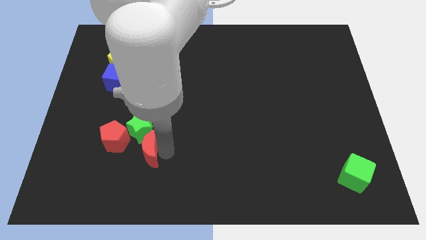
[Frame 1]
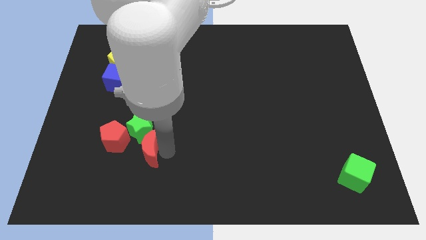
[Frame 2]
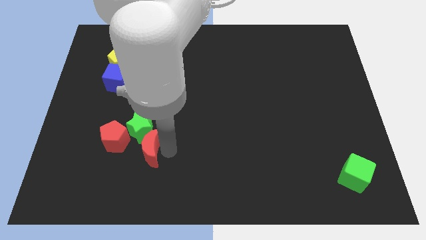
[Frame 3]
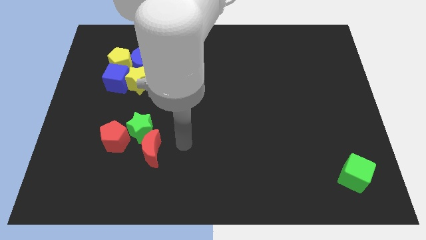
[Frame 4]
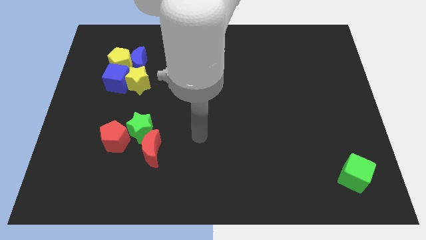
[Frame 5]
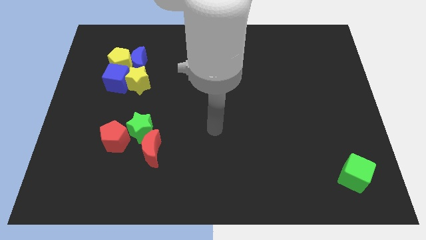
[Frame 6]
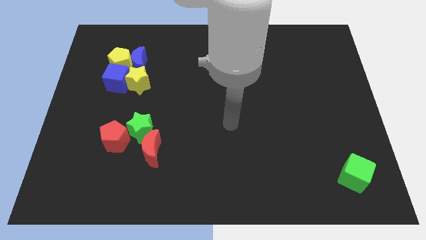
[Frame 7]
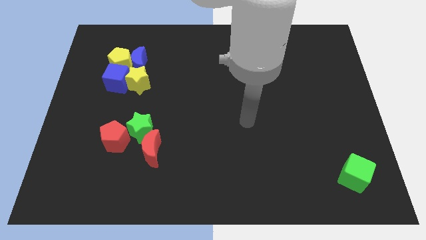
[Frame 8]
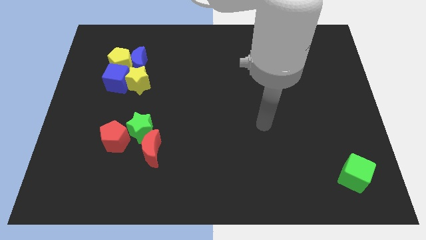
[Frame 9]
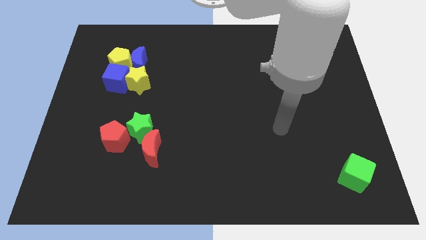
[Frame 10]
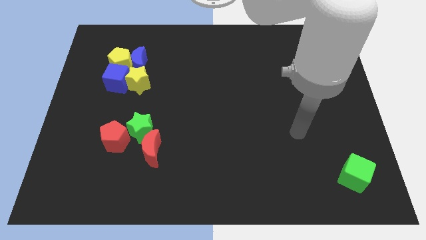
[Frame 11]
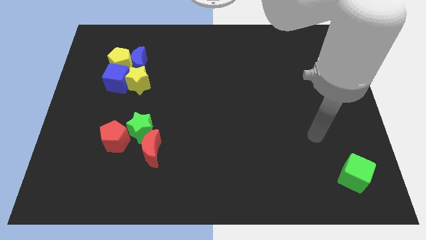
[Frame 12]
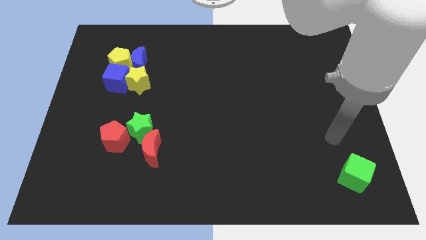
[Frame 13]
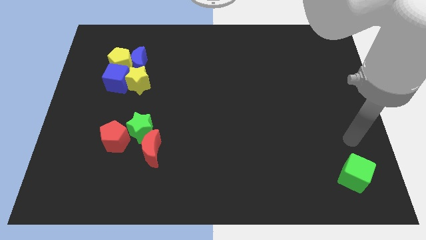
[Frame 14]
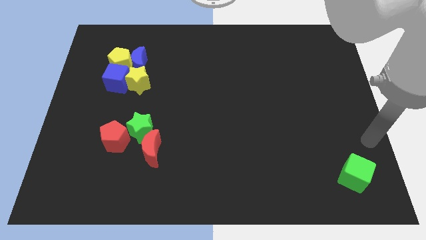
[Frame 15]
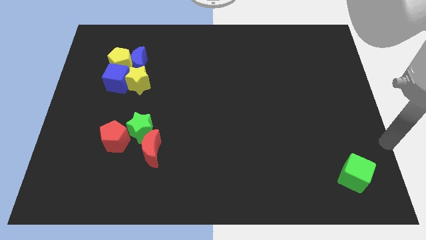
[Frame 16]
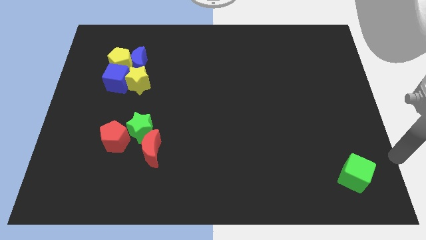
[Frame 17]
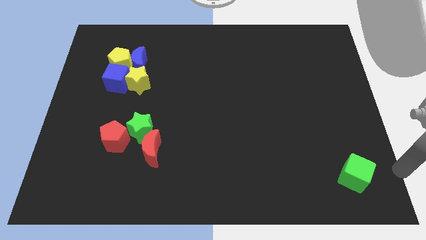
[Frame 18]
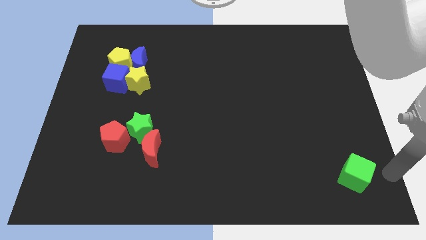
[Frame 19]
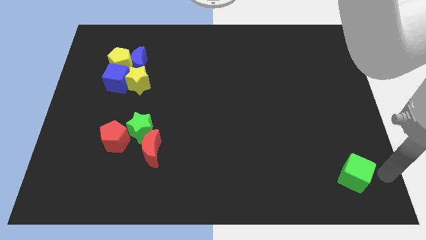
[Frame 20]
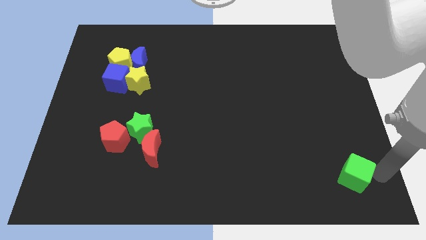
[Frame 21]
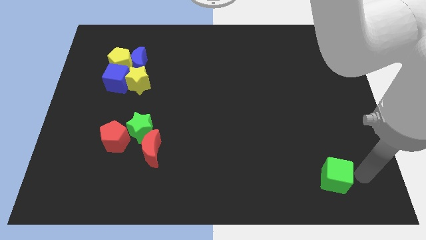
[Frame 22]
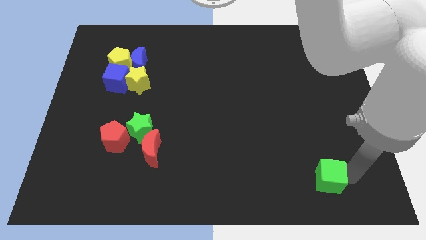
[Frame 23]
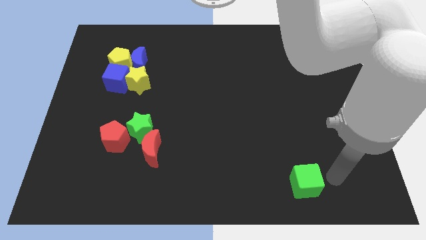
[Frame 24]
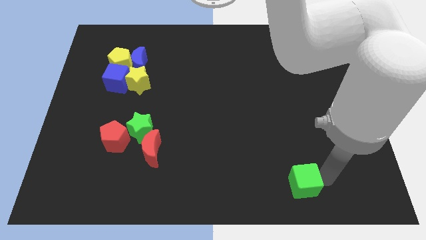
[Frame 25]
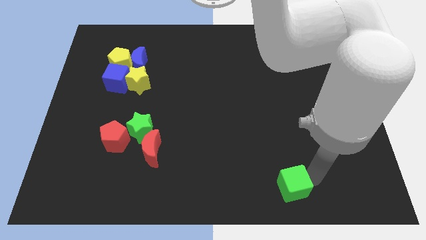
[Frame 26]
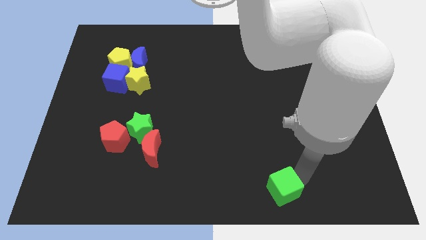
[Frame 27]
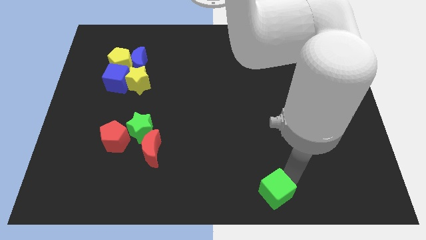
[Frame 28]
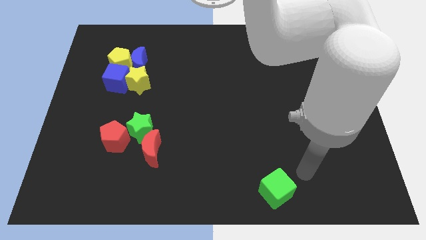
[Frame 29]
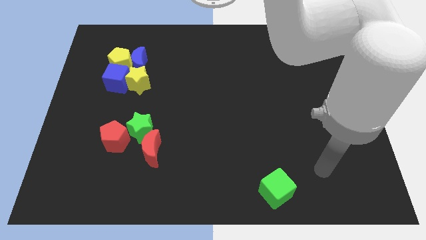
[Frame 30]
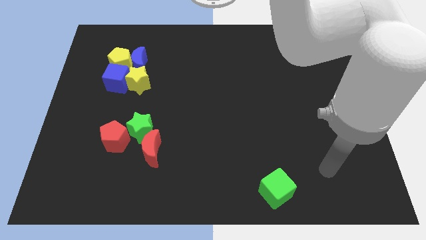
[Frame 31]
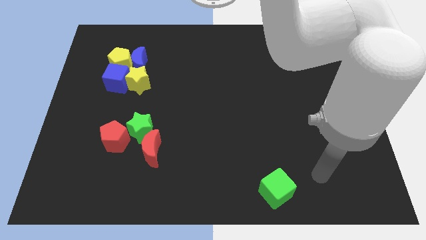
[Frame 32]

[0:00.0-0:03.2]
move green cube towards the bottom center of the board

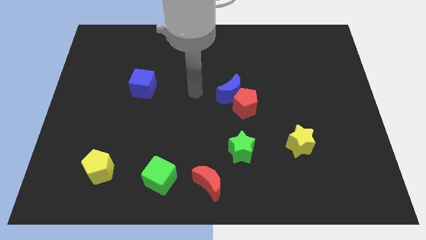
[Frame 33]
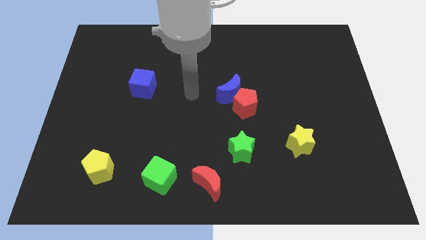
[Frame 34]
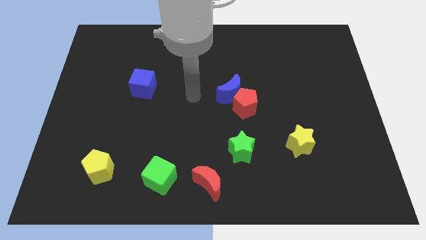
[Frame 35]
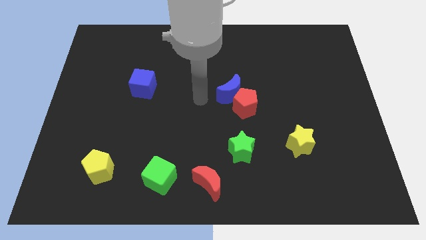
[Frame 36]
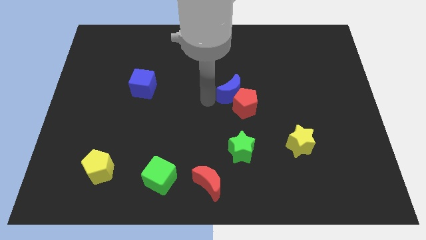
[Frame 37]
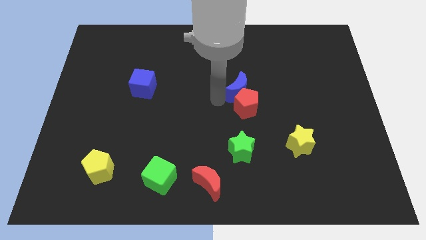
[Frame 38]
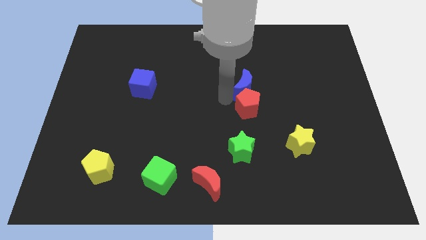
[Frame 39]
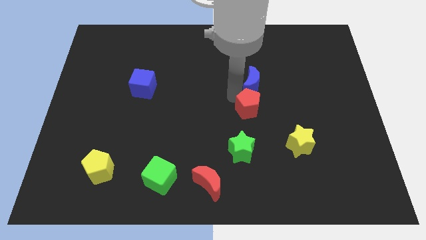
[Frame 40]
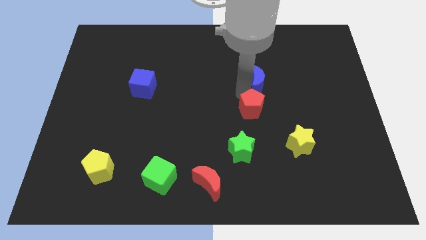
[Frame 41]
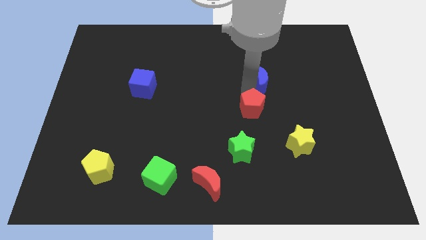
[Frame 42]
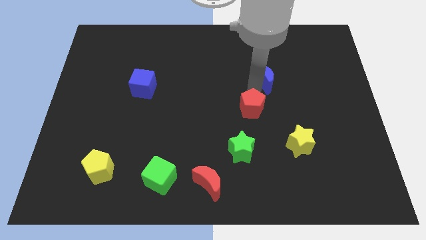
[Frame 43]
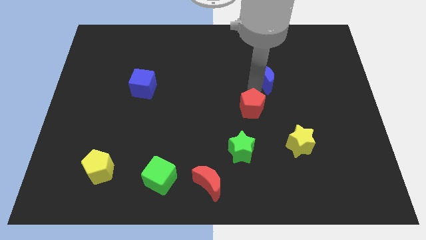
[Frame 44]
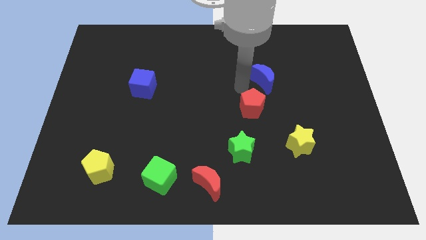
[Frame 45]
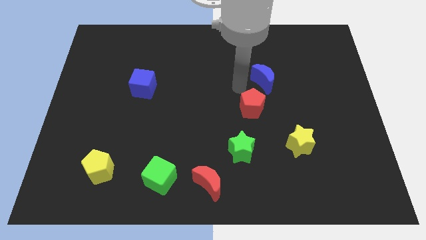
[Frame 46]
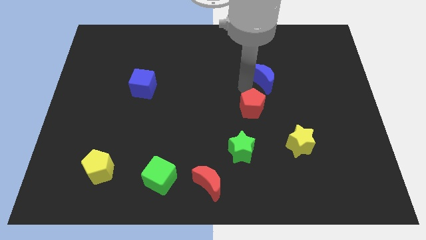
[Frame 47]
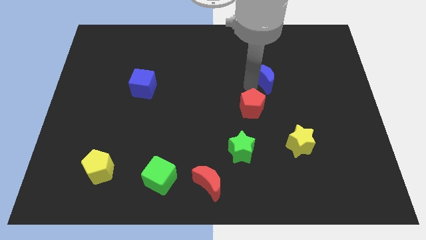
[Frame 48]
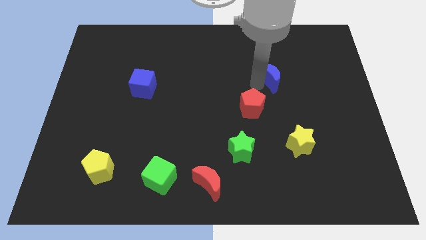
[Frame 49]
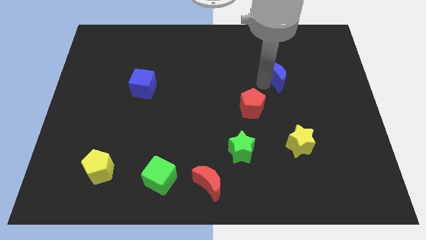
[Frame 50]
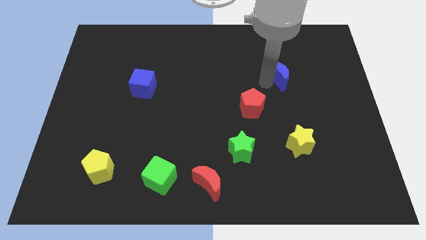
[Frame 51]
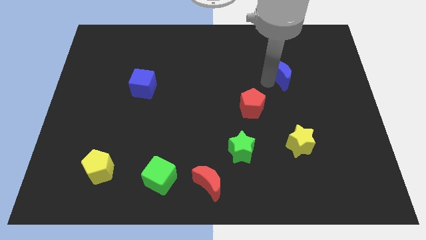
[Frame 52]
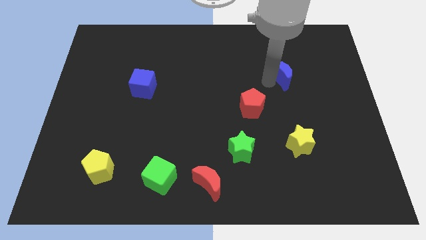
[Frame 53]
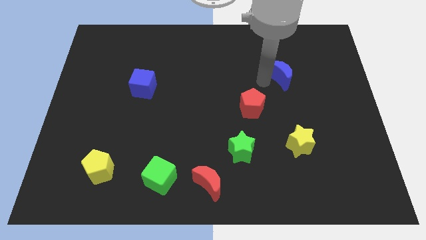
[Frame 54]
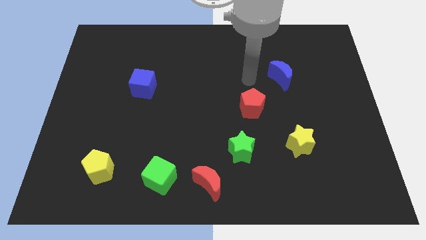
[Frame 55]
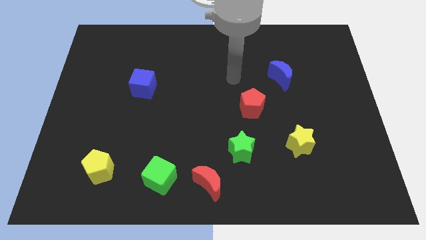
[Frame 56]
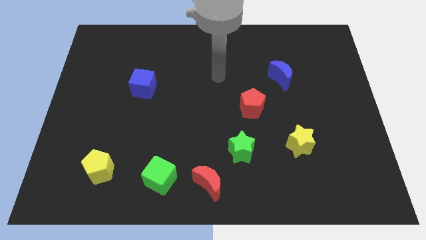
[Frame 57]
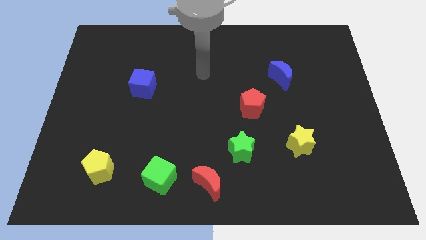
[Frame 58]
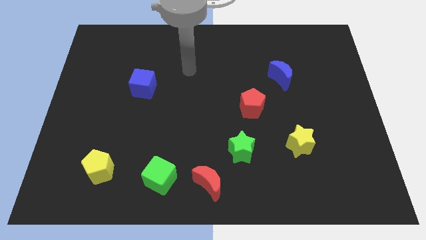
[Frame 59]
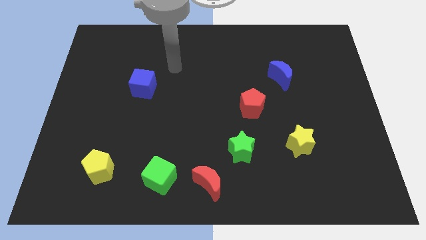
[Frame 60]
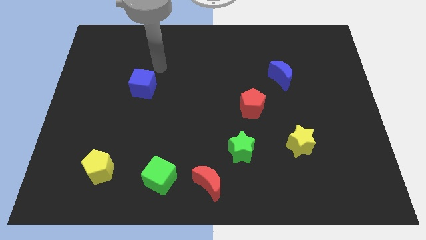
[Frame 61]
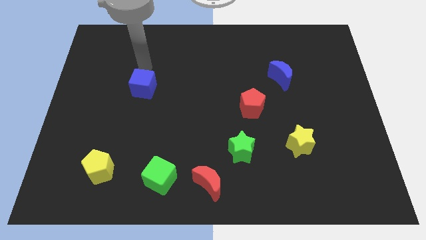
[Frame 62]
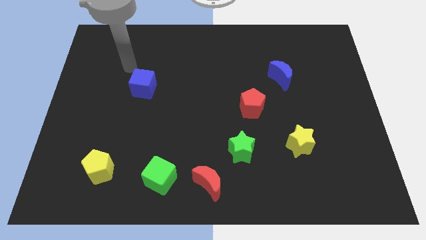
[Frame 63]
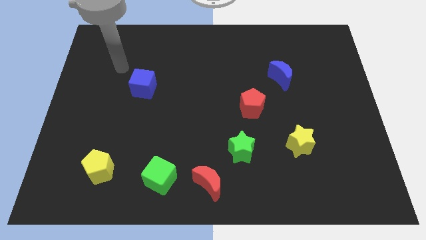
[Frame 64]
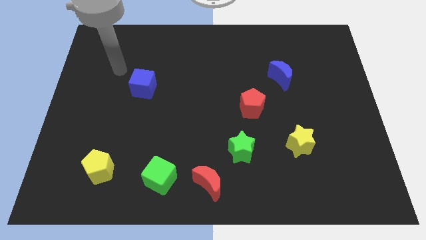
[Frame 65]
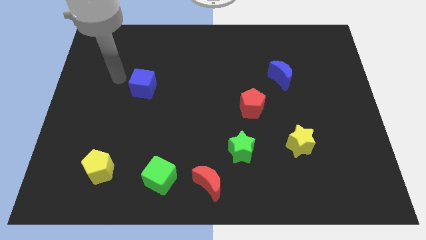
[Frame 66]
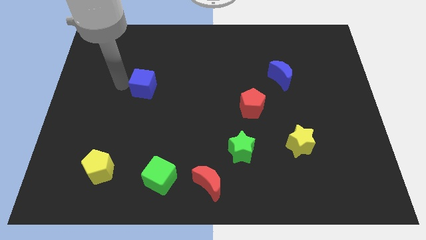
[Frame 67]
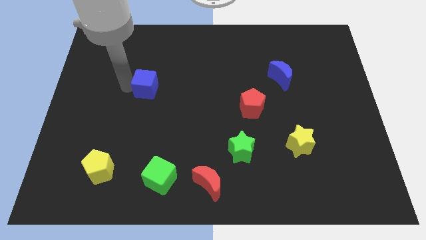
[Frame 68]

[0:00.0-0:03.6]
move the blue crescent towards the top right of the board

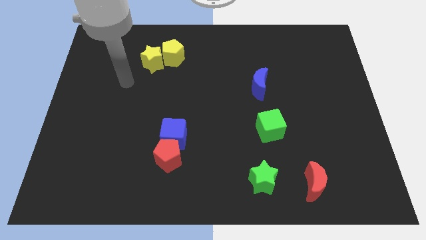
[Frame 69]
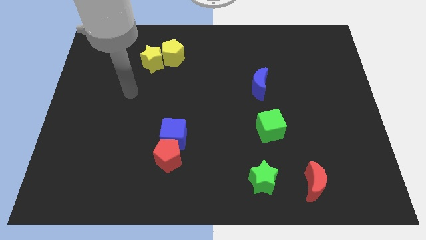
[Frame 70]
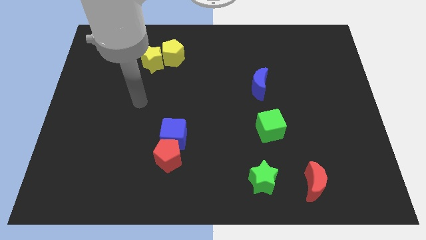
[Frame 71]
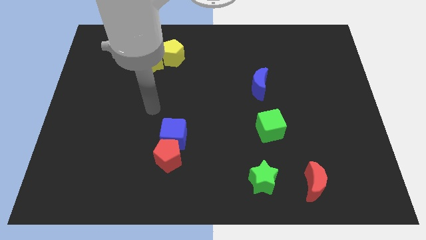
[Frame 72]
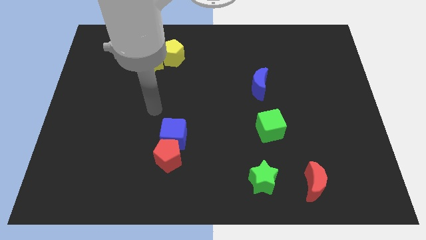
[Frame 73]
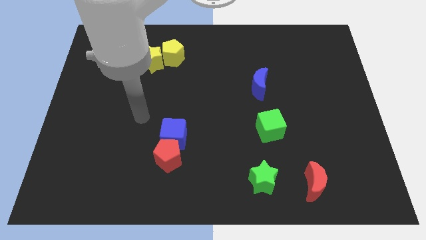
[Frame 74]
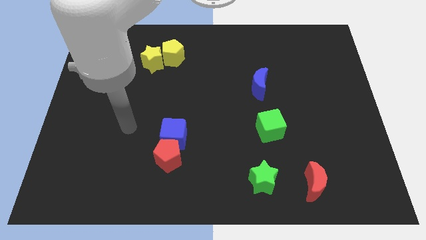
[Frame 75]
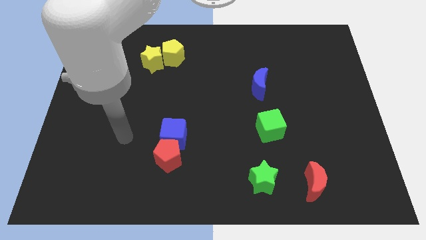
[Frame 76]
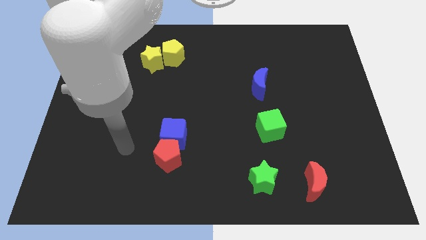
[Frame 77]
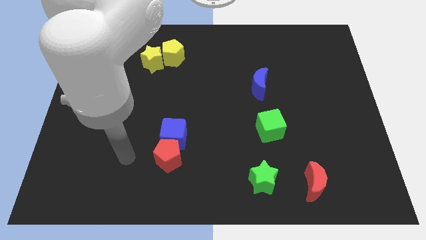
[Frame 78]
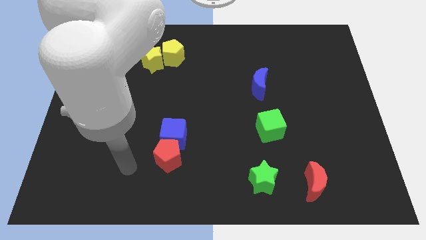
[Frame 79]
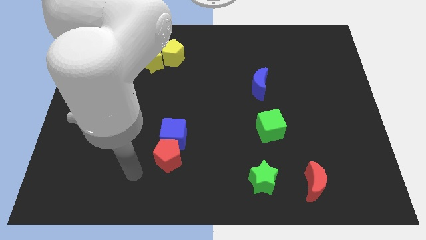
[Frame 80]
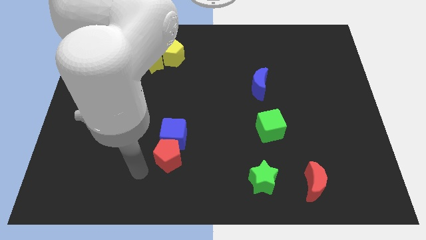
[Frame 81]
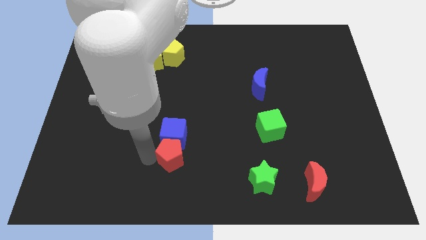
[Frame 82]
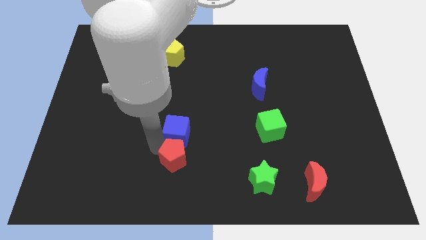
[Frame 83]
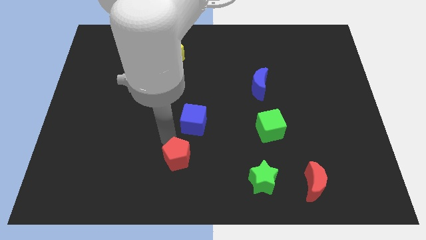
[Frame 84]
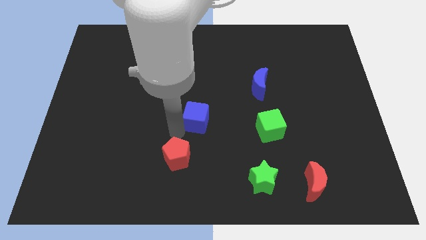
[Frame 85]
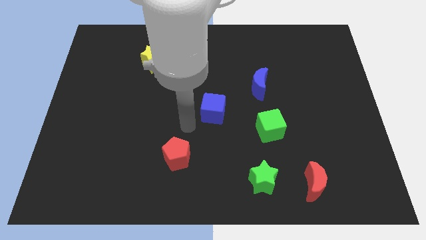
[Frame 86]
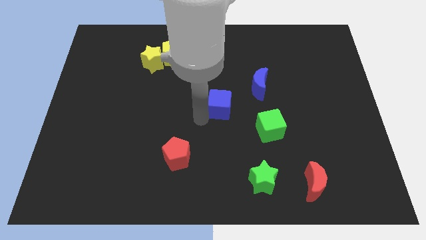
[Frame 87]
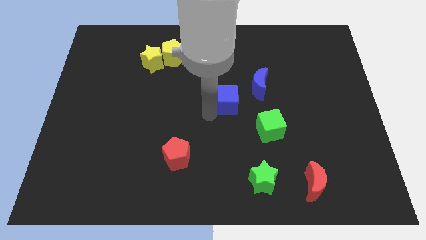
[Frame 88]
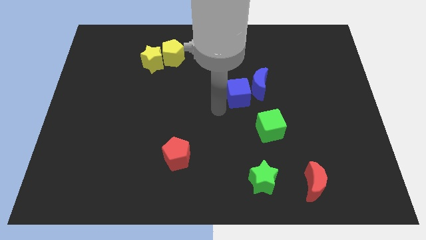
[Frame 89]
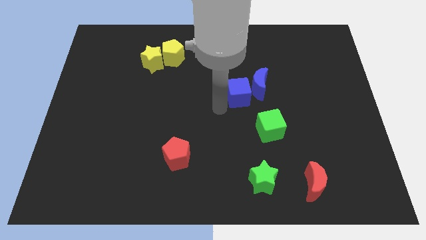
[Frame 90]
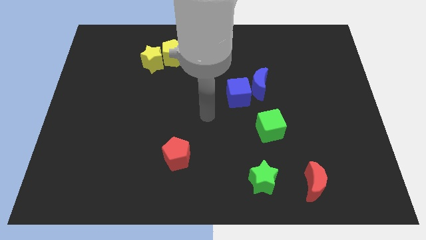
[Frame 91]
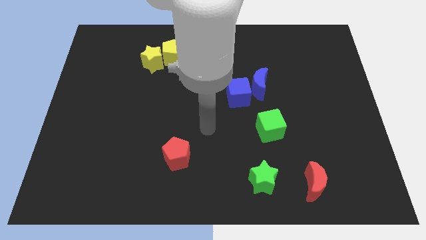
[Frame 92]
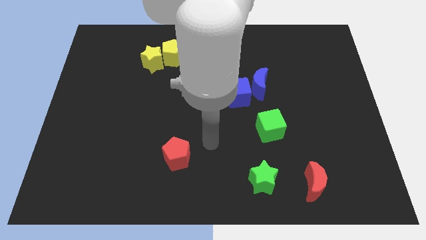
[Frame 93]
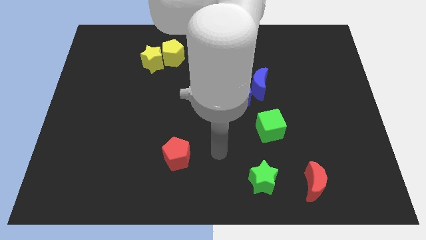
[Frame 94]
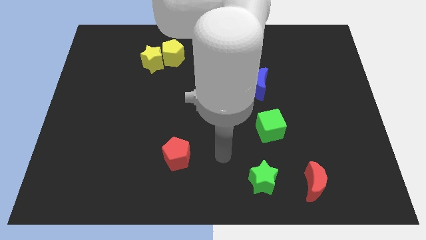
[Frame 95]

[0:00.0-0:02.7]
move the blue cube to the left of the blue crescent
